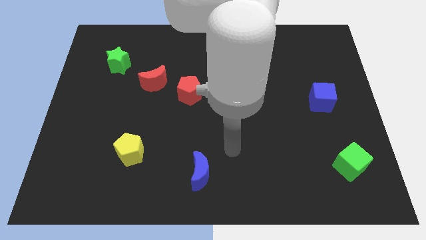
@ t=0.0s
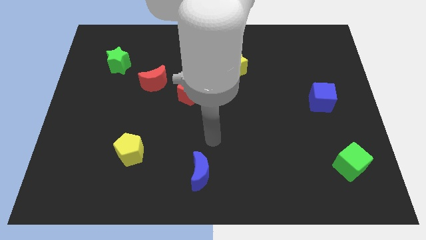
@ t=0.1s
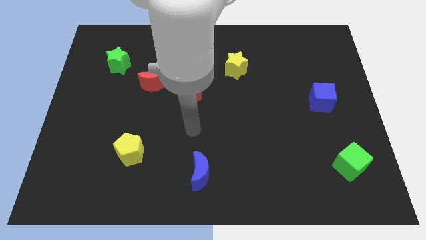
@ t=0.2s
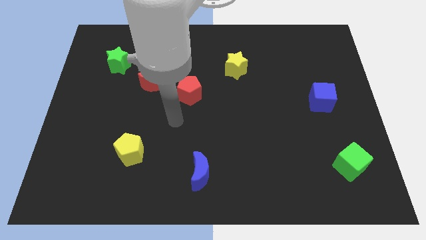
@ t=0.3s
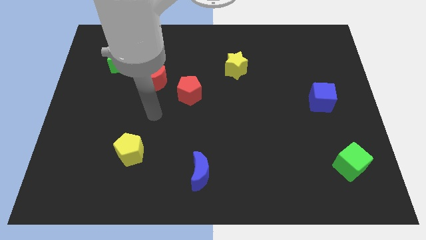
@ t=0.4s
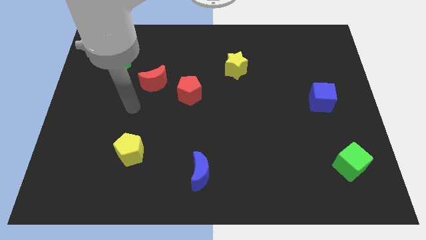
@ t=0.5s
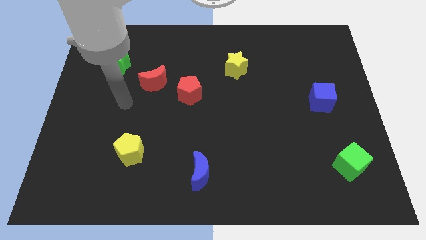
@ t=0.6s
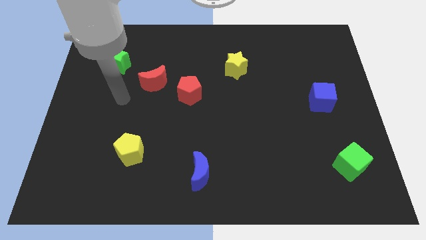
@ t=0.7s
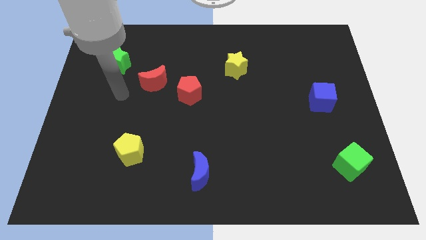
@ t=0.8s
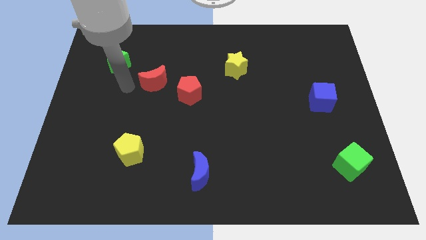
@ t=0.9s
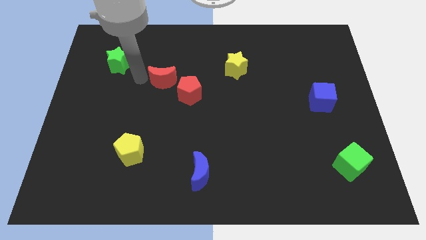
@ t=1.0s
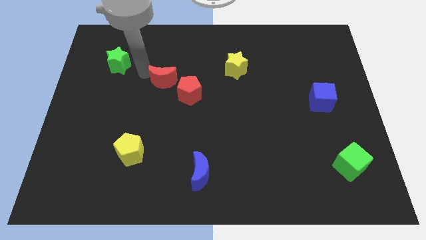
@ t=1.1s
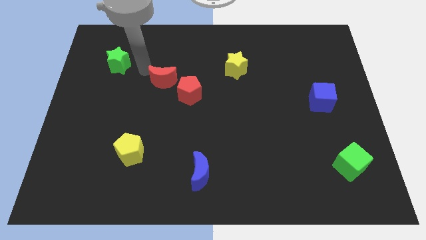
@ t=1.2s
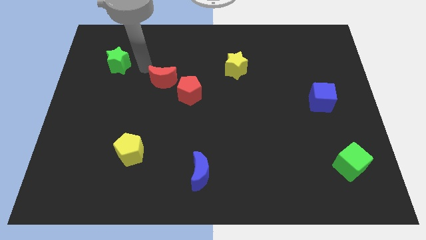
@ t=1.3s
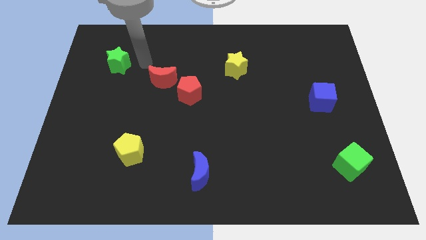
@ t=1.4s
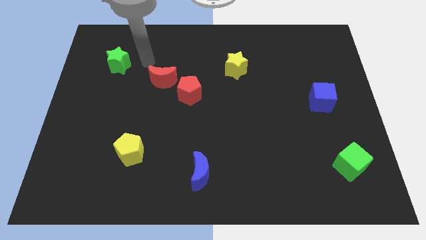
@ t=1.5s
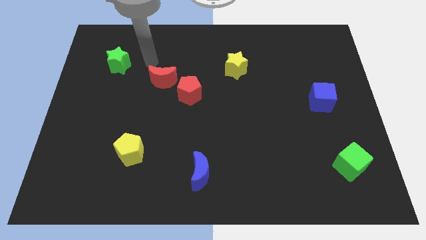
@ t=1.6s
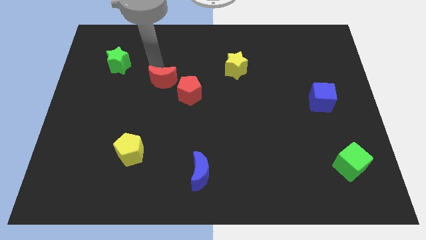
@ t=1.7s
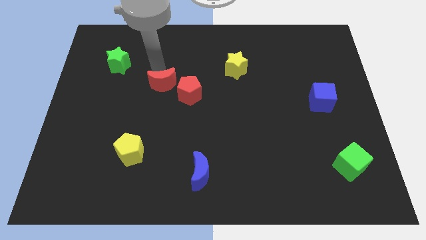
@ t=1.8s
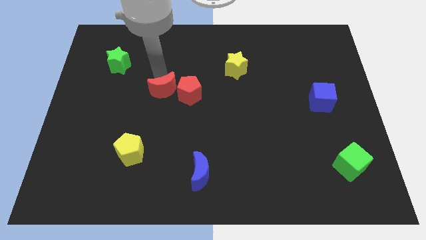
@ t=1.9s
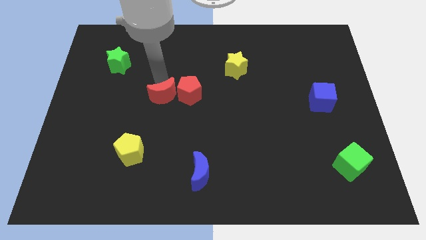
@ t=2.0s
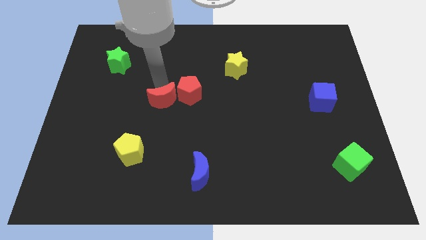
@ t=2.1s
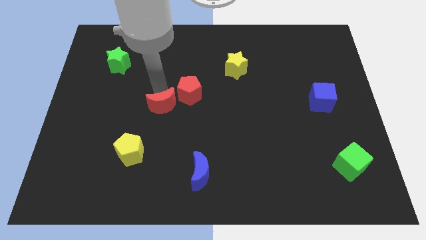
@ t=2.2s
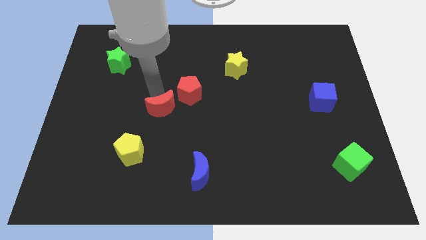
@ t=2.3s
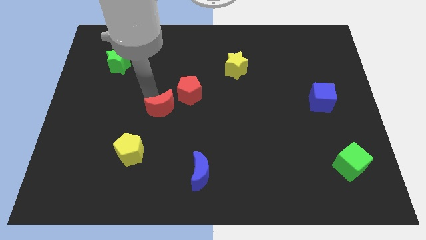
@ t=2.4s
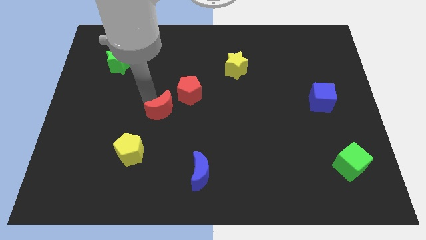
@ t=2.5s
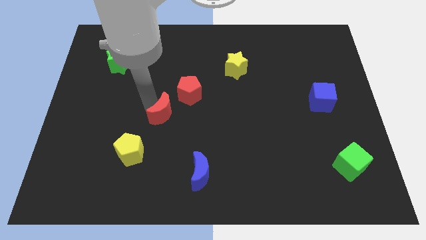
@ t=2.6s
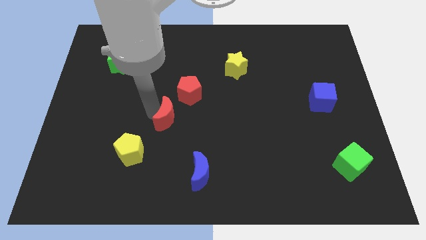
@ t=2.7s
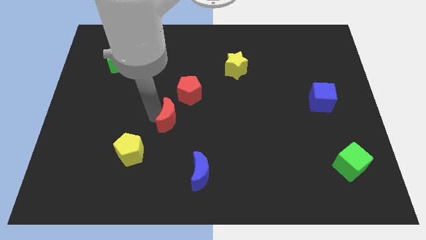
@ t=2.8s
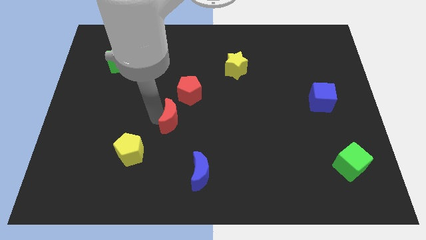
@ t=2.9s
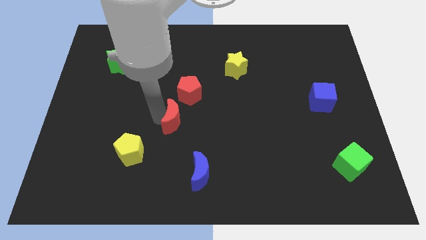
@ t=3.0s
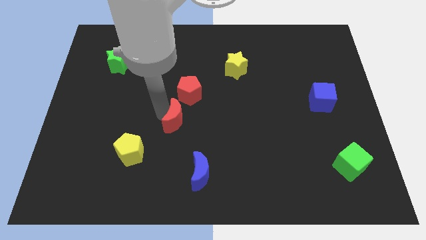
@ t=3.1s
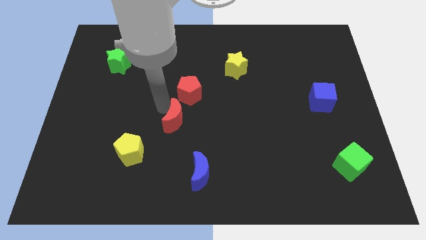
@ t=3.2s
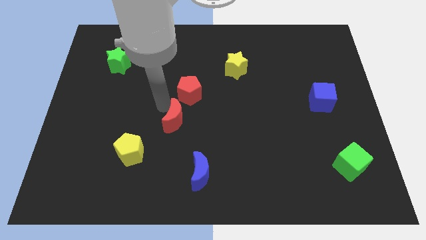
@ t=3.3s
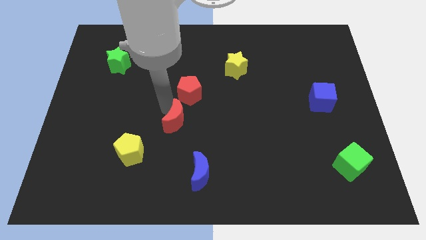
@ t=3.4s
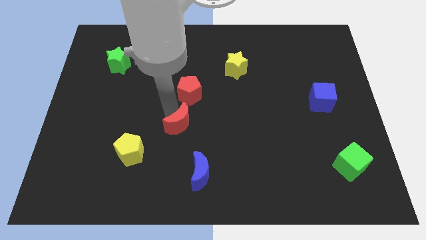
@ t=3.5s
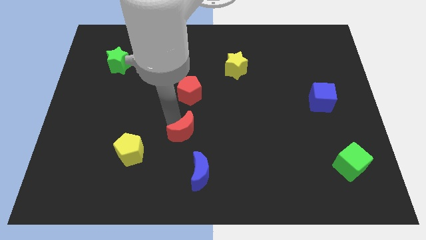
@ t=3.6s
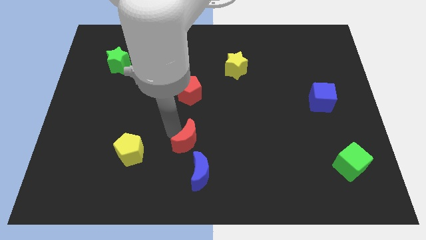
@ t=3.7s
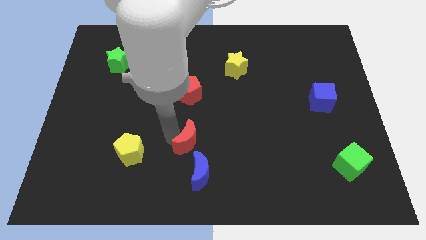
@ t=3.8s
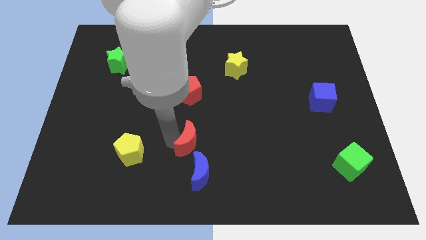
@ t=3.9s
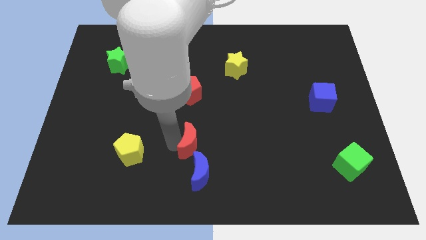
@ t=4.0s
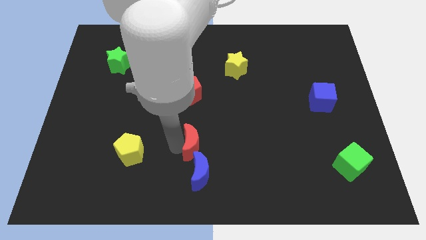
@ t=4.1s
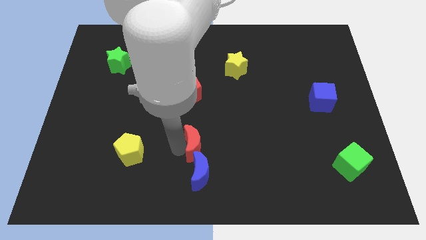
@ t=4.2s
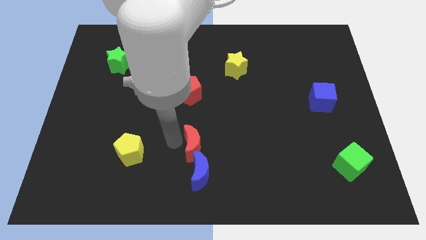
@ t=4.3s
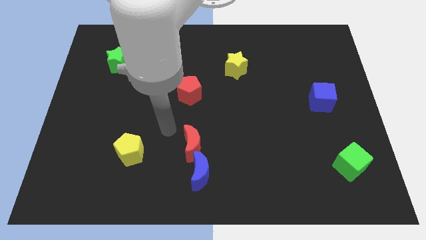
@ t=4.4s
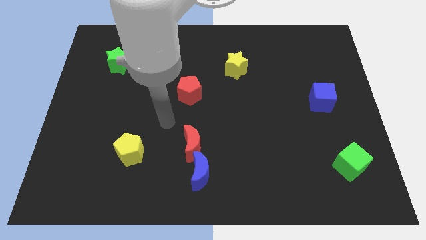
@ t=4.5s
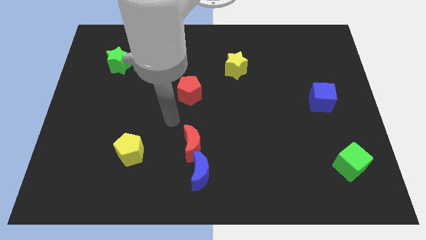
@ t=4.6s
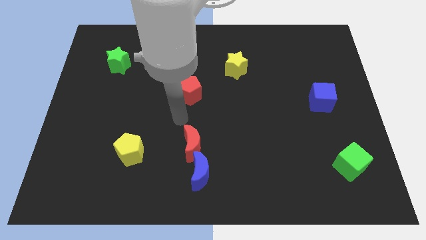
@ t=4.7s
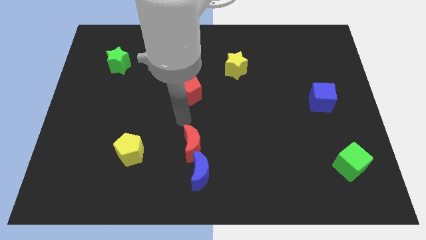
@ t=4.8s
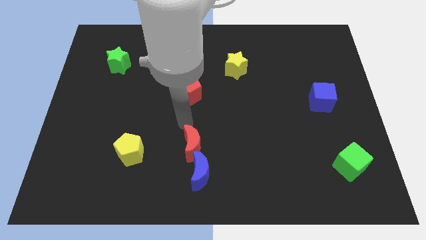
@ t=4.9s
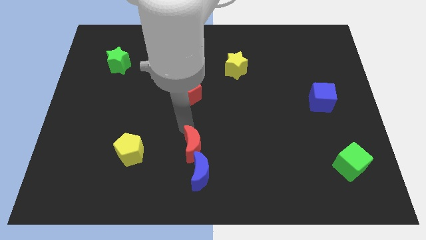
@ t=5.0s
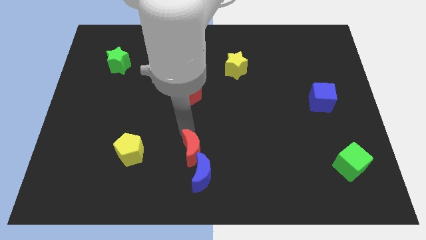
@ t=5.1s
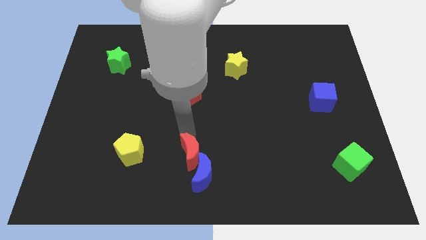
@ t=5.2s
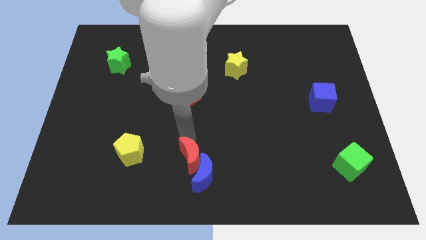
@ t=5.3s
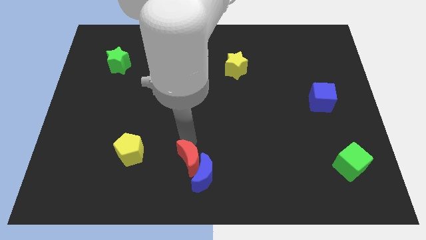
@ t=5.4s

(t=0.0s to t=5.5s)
put the red moon to the blue moon

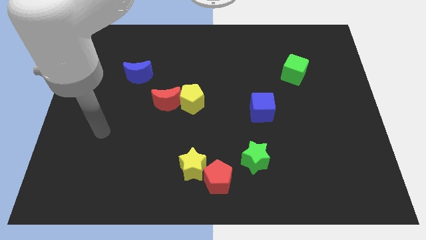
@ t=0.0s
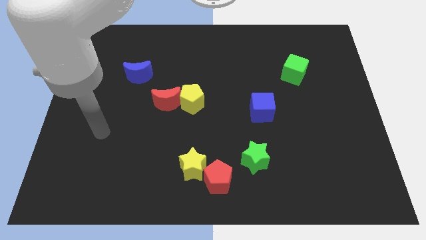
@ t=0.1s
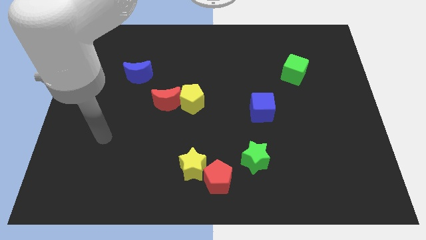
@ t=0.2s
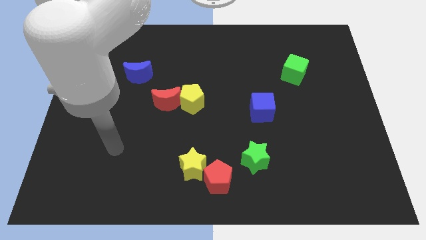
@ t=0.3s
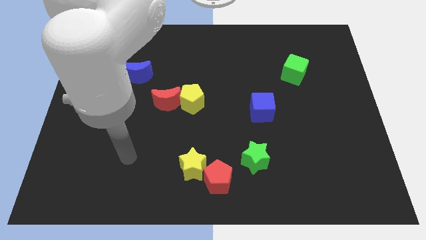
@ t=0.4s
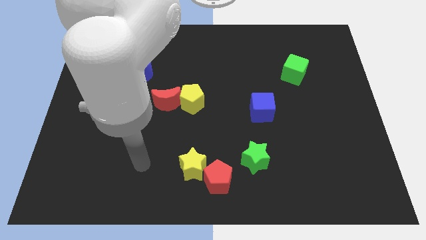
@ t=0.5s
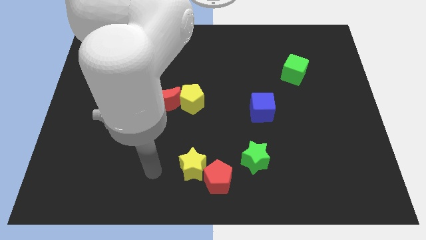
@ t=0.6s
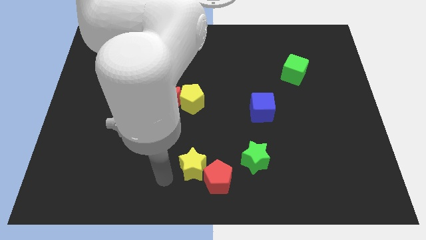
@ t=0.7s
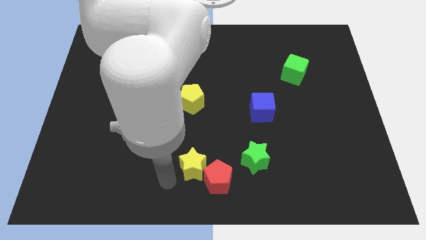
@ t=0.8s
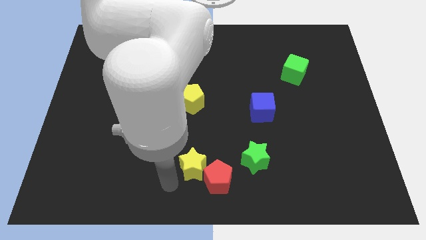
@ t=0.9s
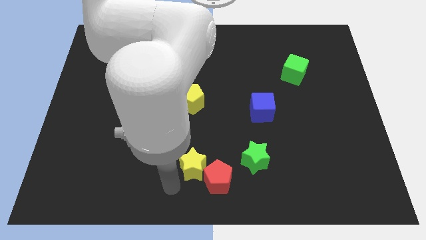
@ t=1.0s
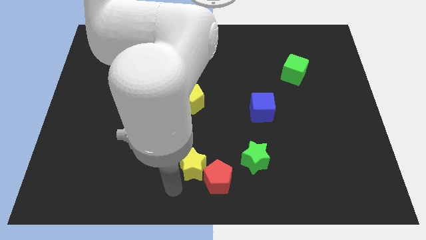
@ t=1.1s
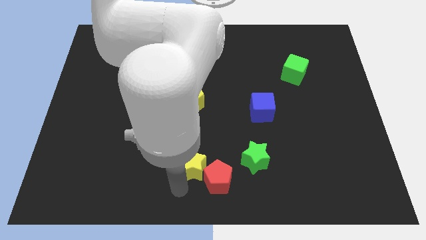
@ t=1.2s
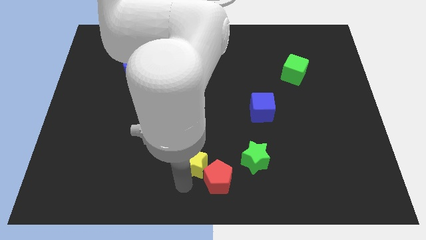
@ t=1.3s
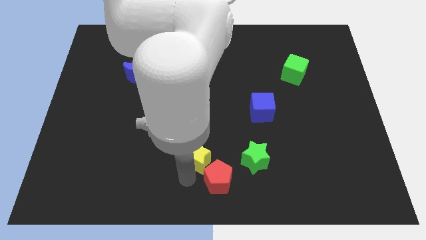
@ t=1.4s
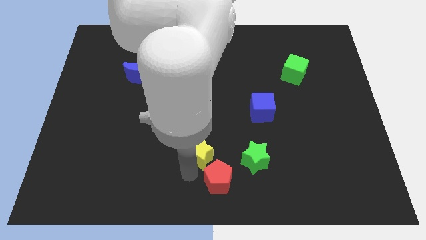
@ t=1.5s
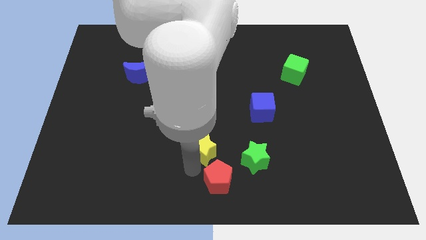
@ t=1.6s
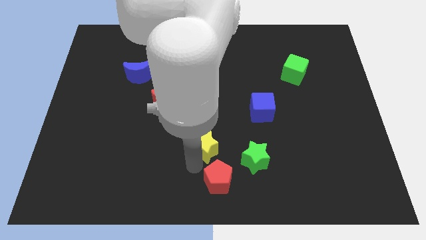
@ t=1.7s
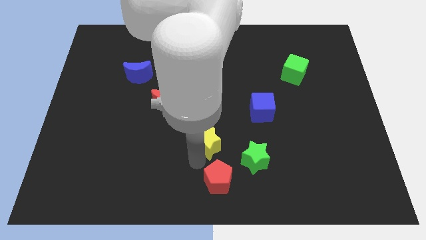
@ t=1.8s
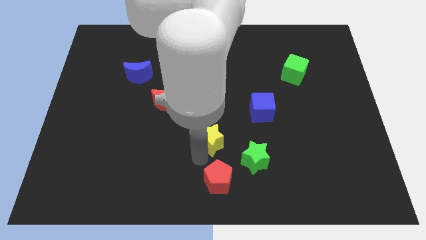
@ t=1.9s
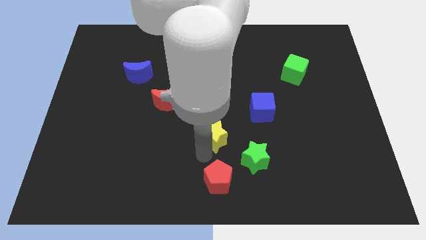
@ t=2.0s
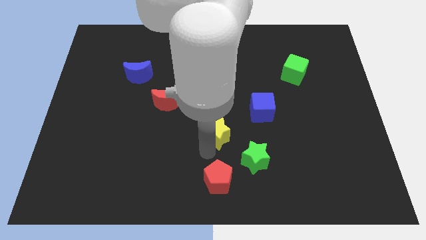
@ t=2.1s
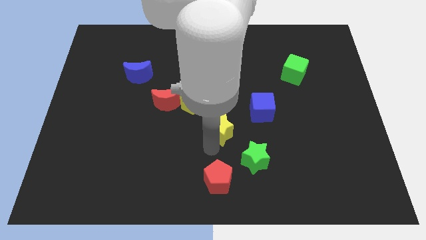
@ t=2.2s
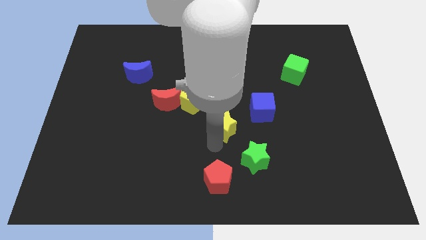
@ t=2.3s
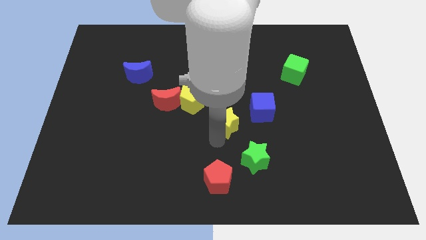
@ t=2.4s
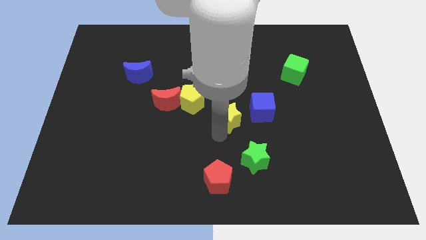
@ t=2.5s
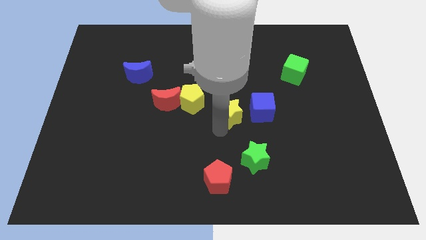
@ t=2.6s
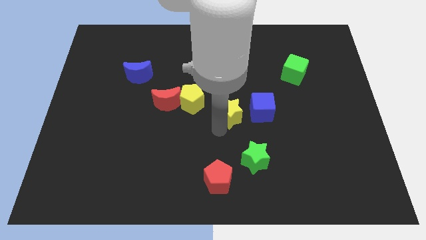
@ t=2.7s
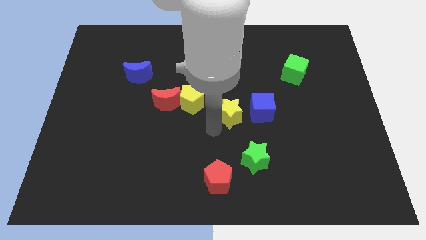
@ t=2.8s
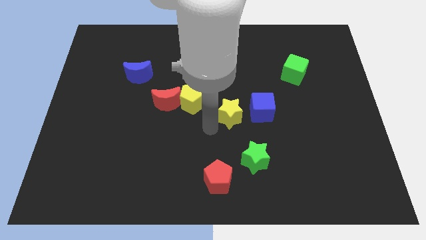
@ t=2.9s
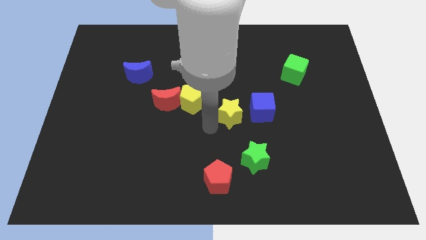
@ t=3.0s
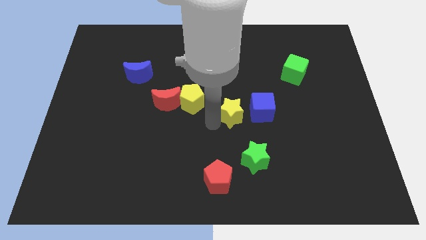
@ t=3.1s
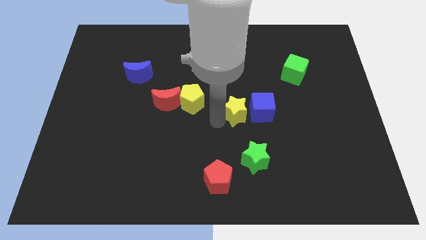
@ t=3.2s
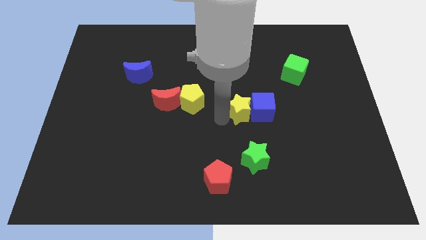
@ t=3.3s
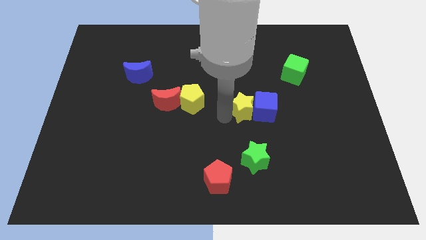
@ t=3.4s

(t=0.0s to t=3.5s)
move the yellow star towards the blue cube
